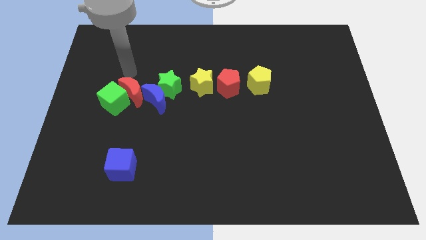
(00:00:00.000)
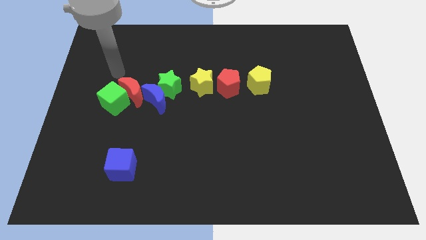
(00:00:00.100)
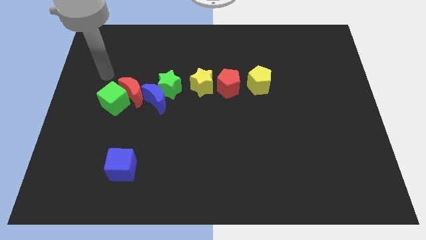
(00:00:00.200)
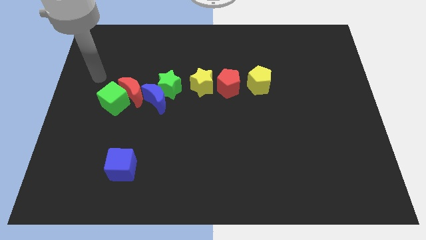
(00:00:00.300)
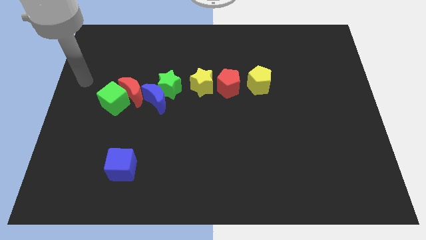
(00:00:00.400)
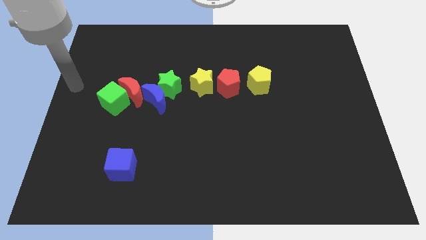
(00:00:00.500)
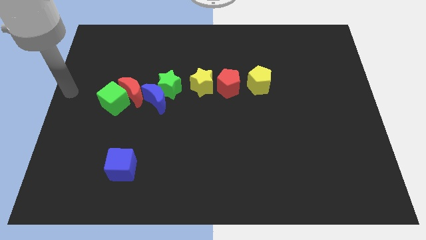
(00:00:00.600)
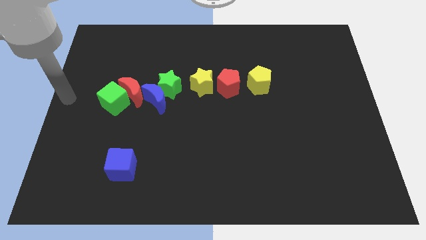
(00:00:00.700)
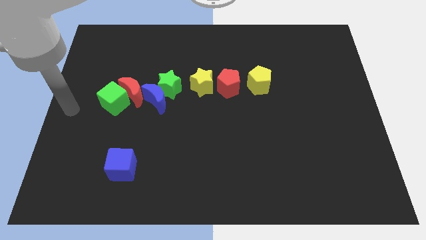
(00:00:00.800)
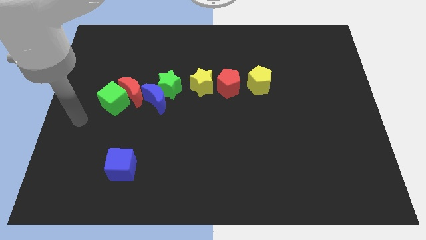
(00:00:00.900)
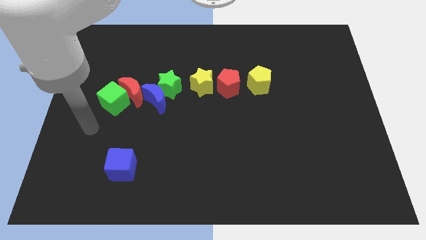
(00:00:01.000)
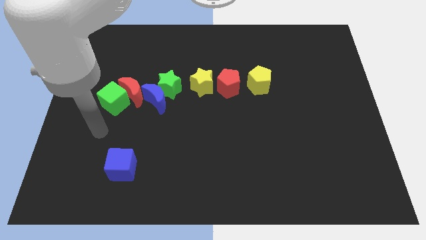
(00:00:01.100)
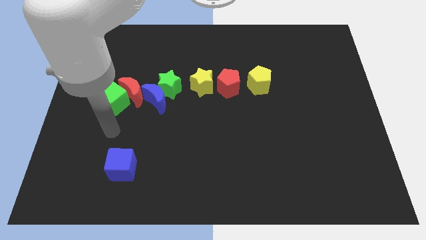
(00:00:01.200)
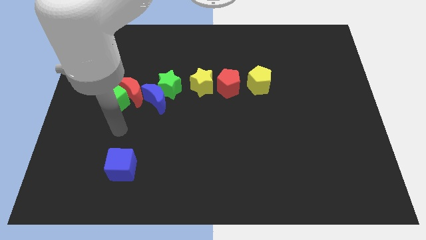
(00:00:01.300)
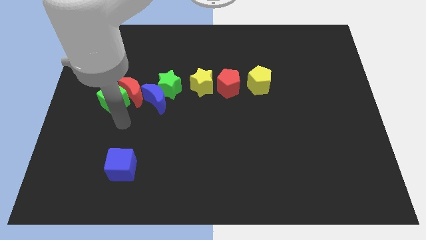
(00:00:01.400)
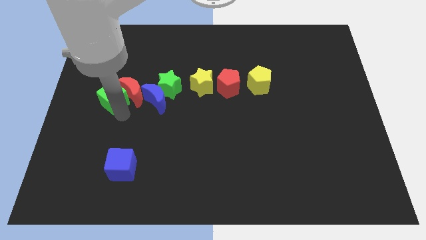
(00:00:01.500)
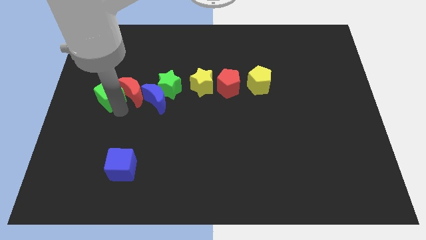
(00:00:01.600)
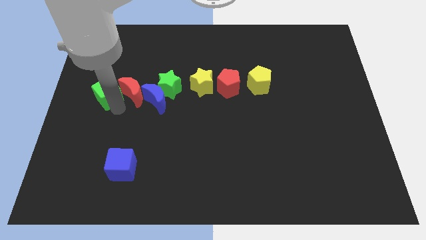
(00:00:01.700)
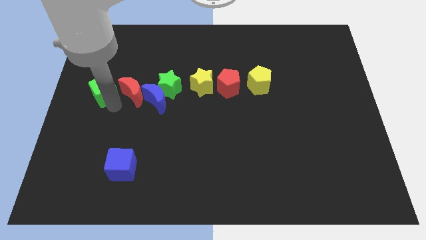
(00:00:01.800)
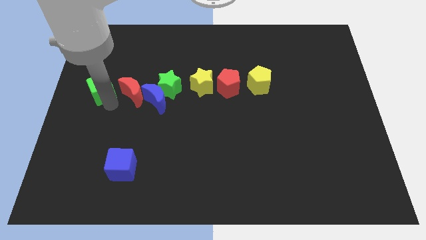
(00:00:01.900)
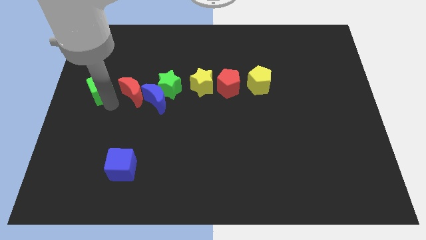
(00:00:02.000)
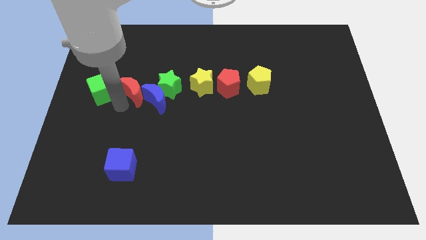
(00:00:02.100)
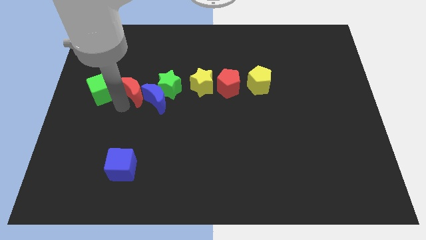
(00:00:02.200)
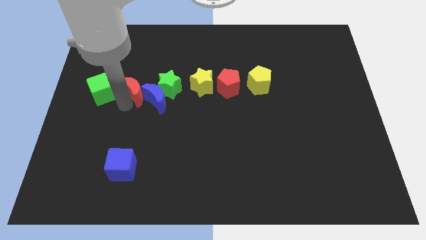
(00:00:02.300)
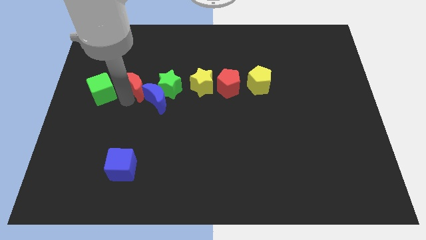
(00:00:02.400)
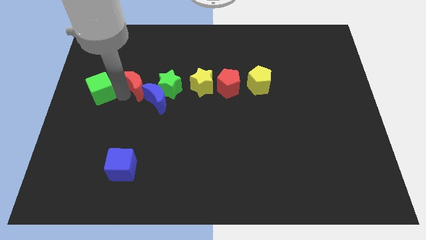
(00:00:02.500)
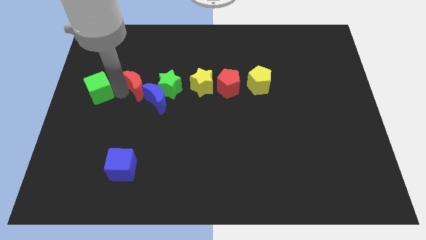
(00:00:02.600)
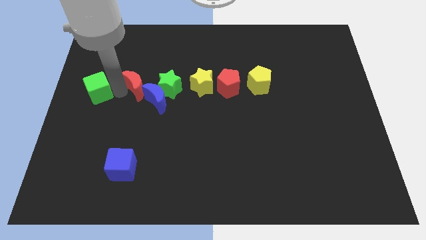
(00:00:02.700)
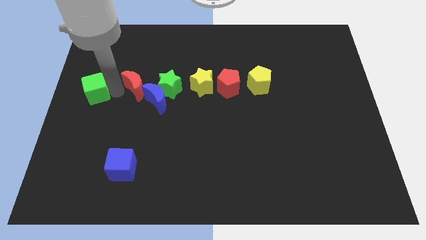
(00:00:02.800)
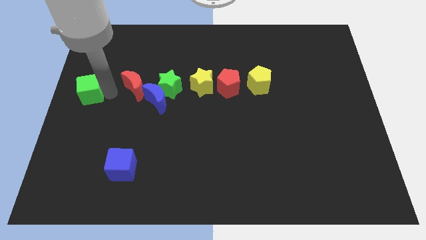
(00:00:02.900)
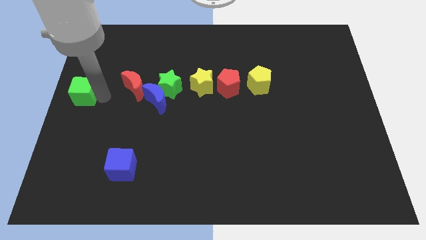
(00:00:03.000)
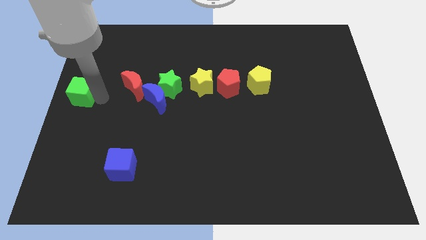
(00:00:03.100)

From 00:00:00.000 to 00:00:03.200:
separate the green cube from the red crescent

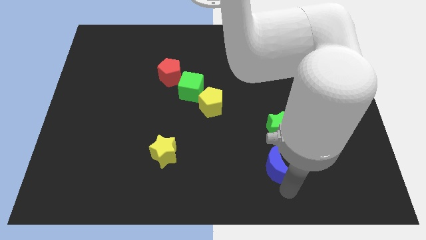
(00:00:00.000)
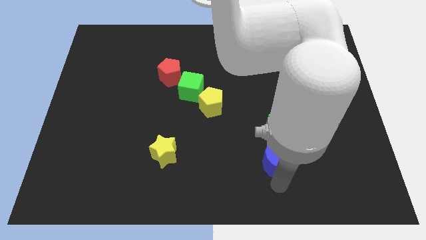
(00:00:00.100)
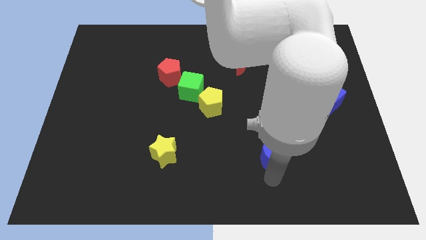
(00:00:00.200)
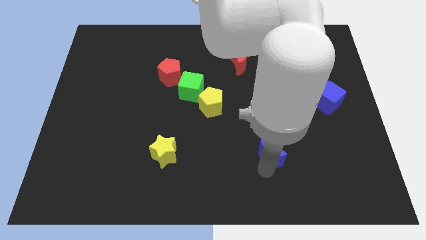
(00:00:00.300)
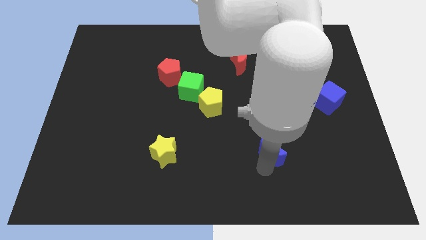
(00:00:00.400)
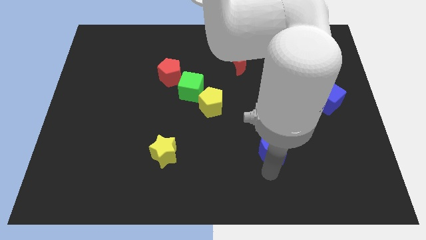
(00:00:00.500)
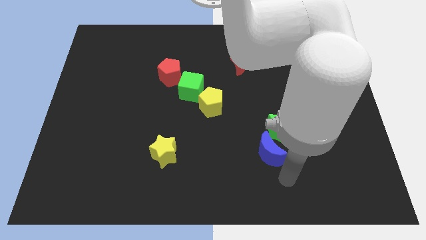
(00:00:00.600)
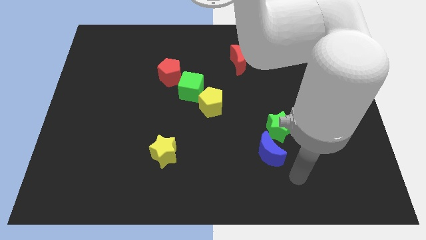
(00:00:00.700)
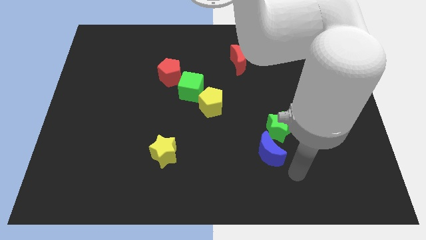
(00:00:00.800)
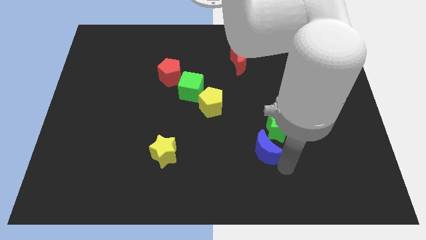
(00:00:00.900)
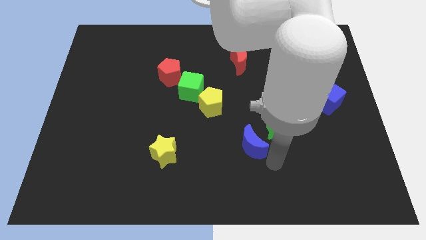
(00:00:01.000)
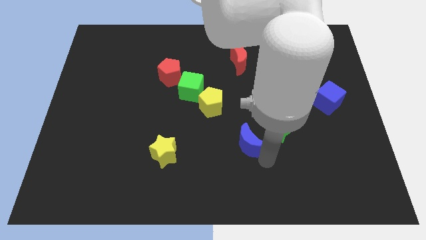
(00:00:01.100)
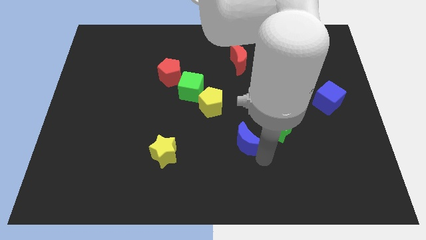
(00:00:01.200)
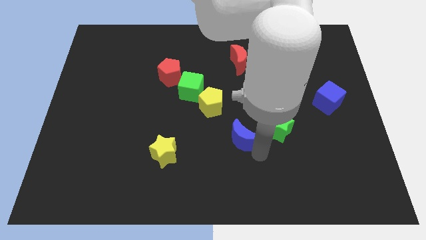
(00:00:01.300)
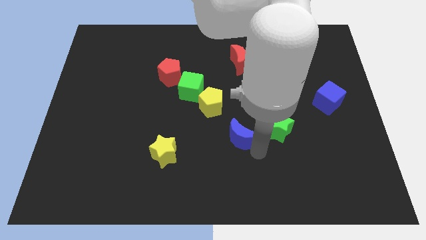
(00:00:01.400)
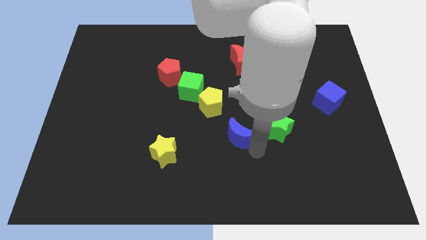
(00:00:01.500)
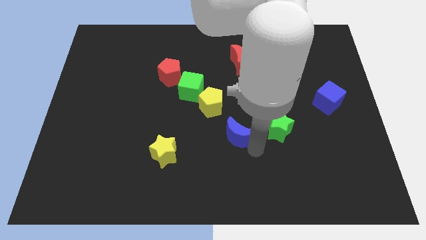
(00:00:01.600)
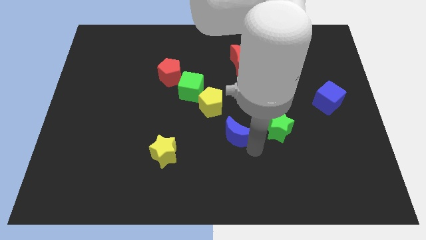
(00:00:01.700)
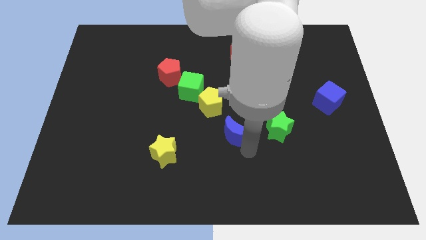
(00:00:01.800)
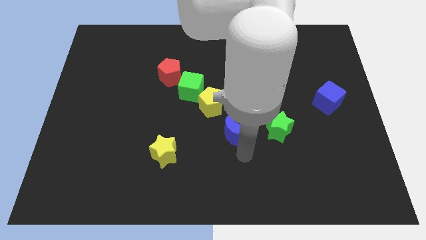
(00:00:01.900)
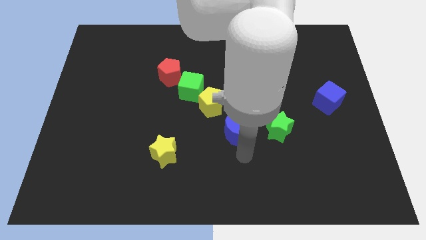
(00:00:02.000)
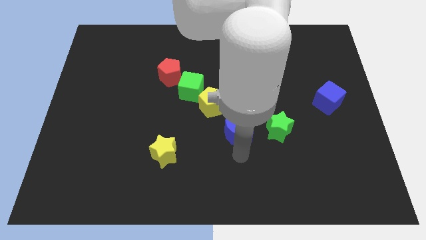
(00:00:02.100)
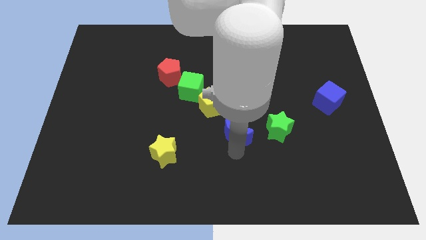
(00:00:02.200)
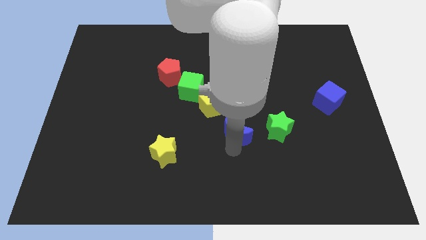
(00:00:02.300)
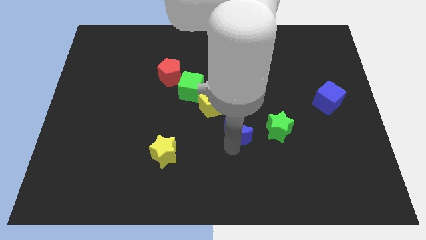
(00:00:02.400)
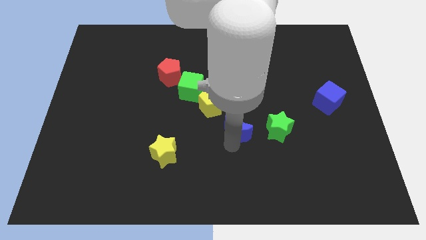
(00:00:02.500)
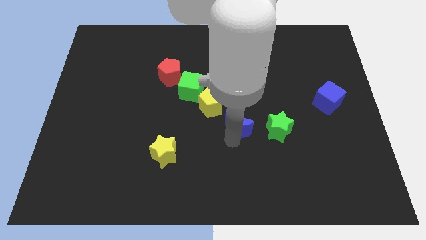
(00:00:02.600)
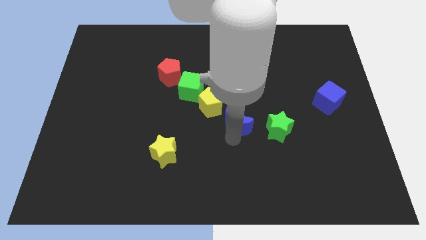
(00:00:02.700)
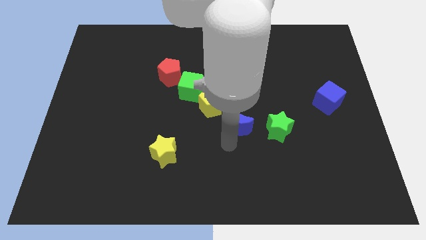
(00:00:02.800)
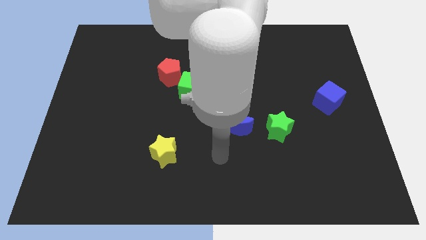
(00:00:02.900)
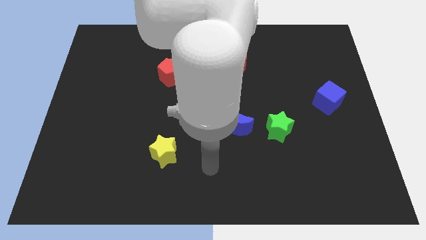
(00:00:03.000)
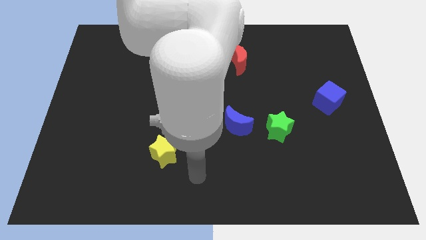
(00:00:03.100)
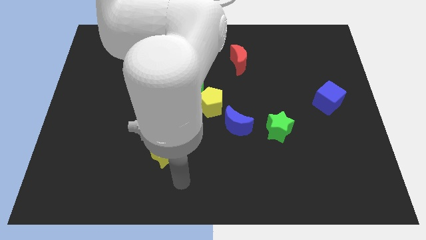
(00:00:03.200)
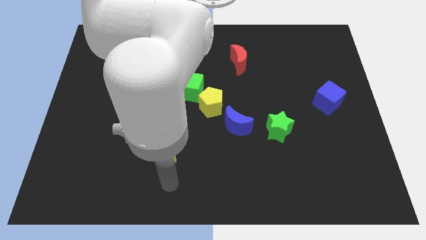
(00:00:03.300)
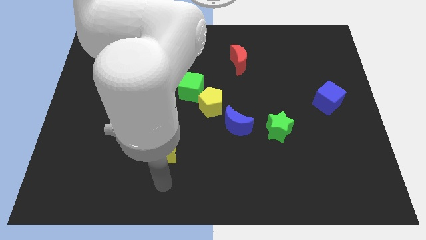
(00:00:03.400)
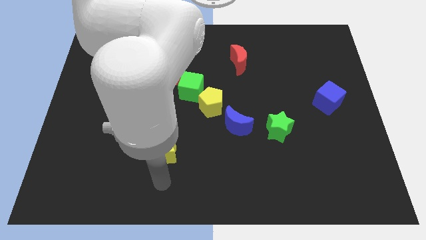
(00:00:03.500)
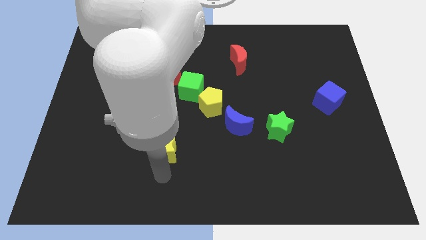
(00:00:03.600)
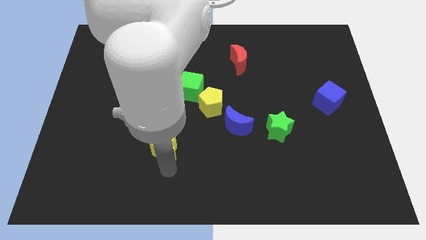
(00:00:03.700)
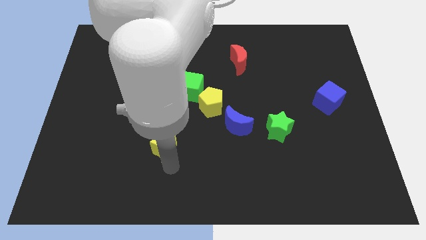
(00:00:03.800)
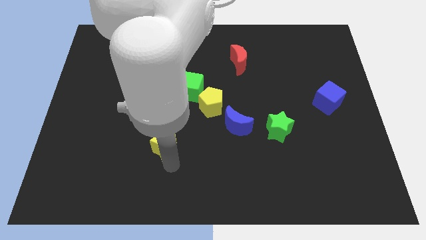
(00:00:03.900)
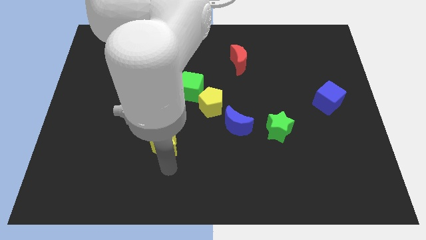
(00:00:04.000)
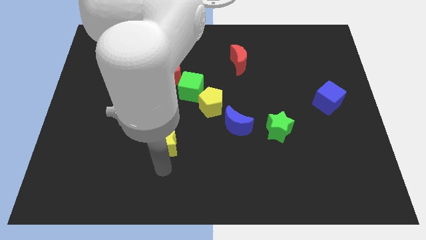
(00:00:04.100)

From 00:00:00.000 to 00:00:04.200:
move the blue crescent towards the right of the yellow pentagon

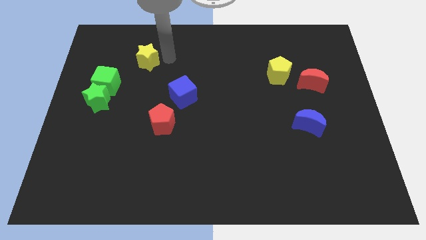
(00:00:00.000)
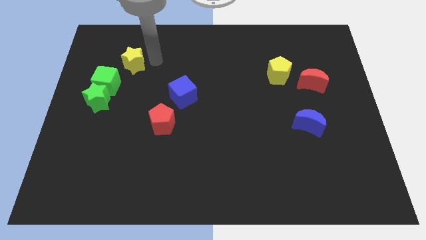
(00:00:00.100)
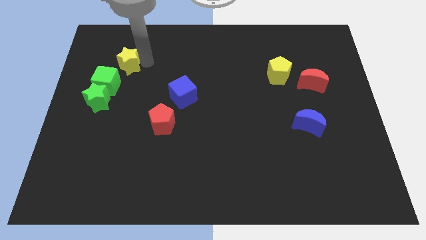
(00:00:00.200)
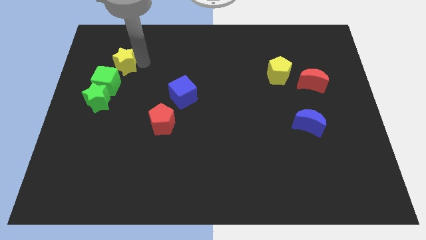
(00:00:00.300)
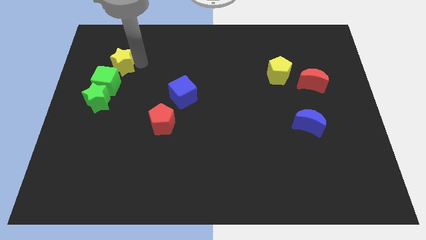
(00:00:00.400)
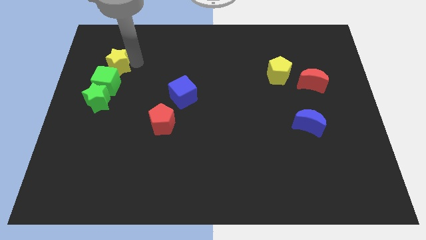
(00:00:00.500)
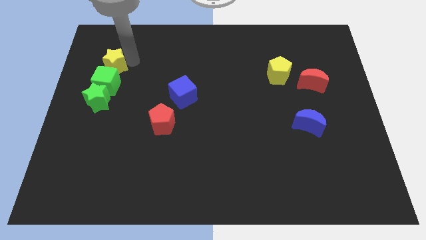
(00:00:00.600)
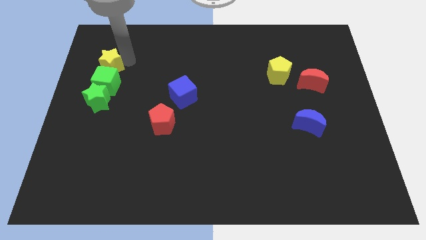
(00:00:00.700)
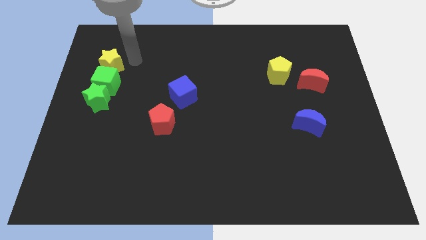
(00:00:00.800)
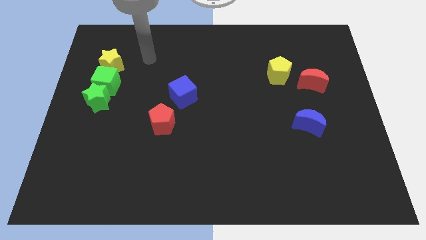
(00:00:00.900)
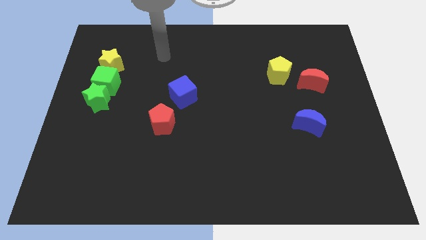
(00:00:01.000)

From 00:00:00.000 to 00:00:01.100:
slide the yellow star above the green cube

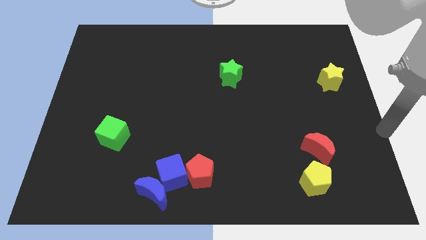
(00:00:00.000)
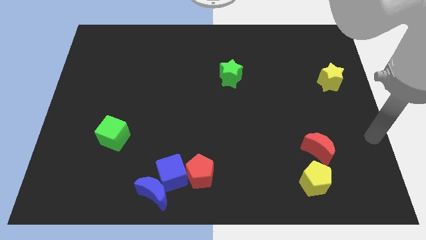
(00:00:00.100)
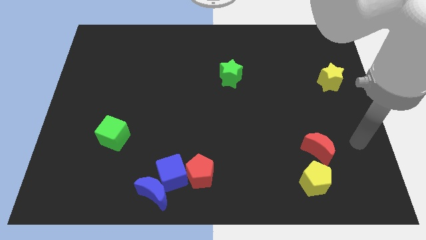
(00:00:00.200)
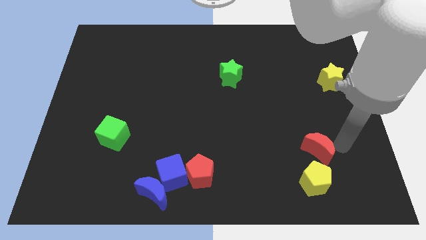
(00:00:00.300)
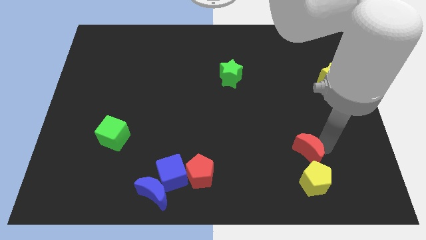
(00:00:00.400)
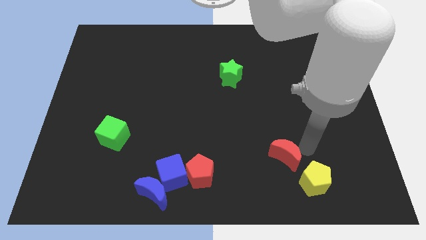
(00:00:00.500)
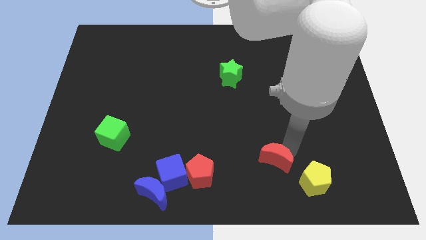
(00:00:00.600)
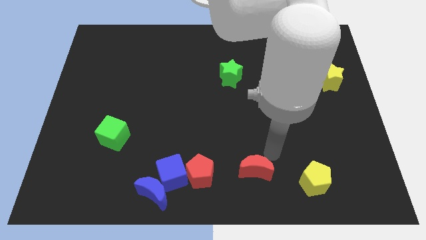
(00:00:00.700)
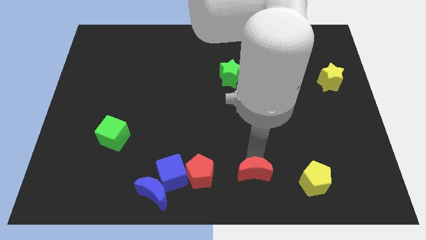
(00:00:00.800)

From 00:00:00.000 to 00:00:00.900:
move the red crescent parallel to the right side of the red pentagon
